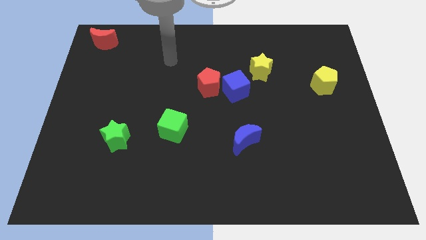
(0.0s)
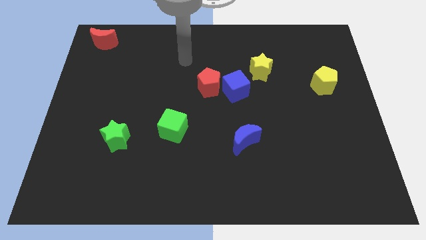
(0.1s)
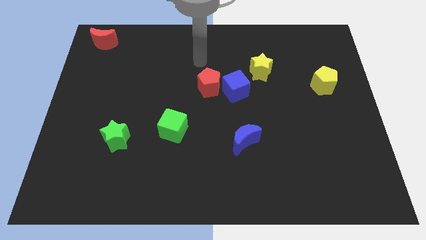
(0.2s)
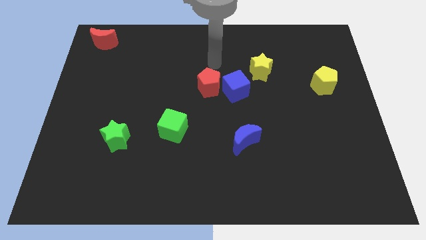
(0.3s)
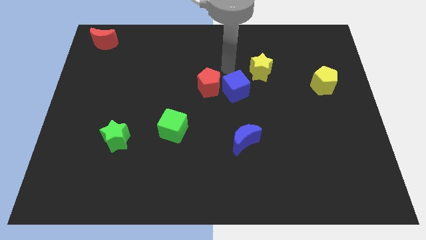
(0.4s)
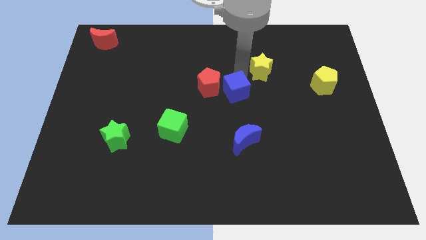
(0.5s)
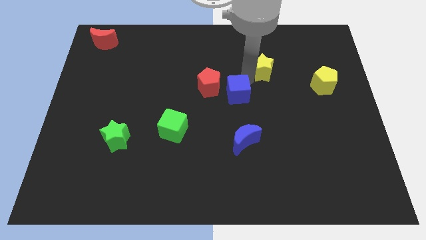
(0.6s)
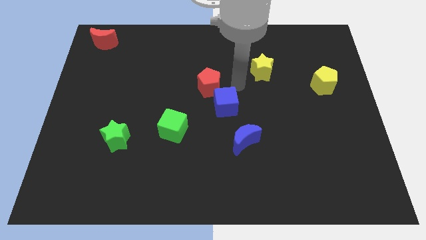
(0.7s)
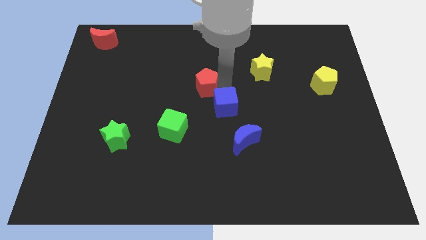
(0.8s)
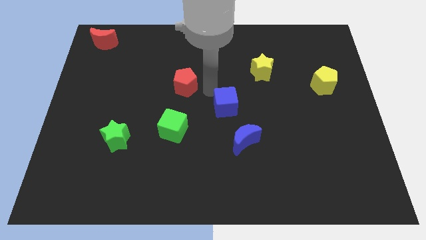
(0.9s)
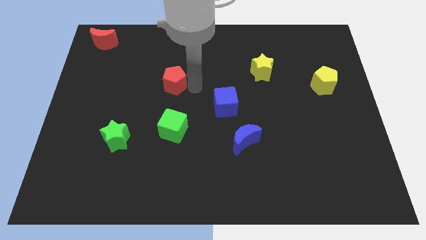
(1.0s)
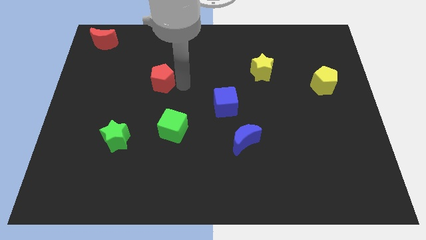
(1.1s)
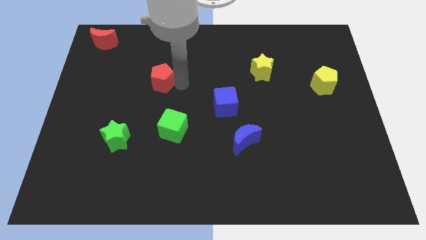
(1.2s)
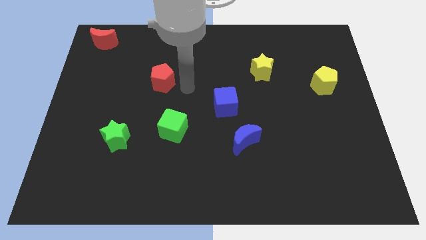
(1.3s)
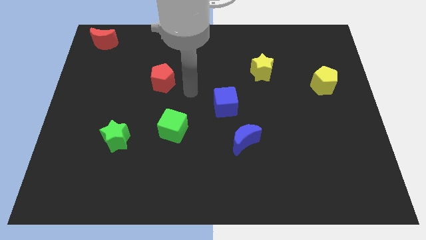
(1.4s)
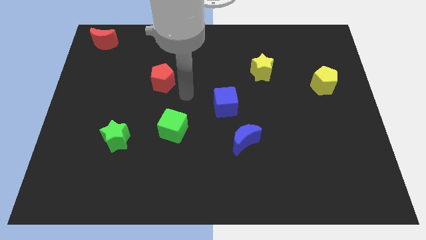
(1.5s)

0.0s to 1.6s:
separate the red pentagon and blue moon

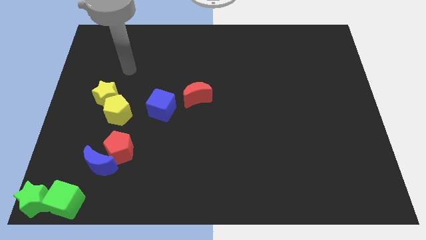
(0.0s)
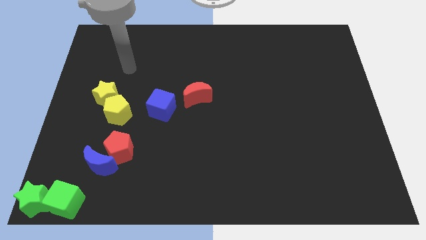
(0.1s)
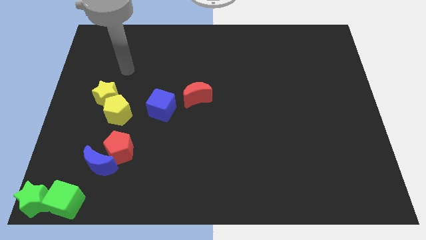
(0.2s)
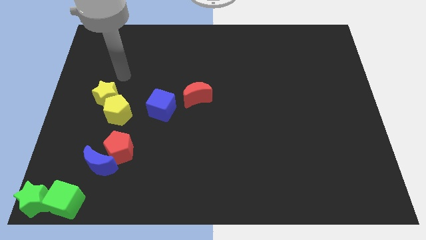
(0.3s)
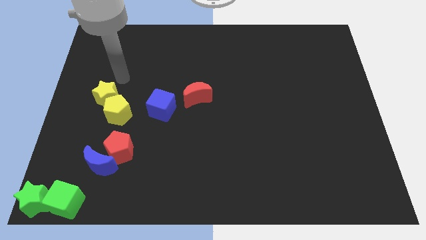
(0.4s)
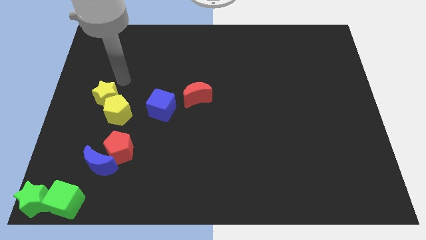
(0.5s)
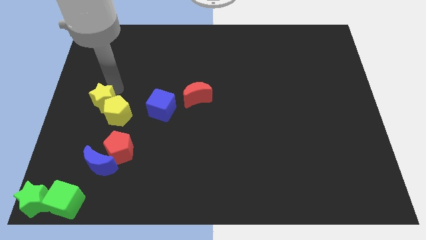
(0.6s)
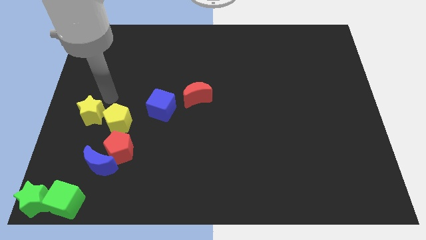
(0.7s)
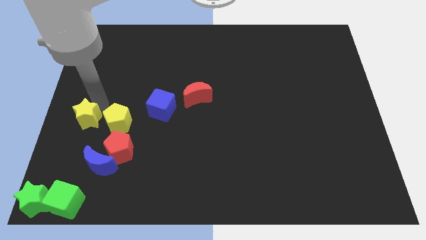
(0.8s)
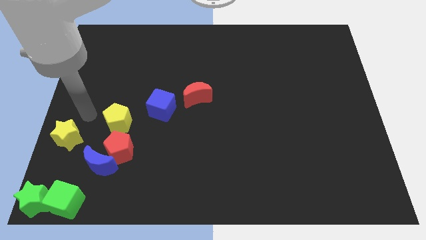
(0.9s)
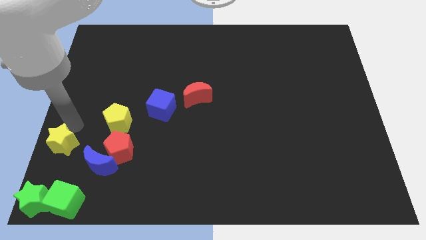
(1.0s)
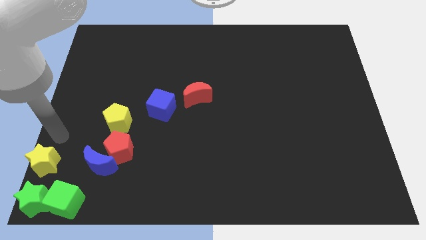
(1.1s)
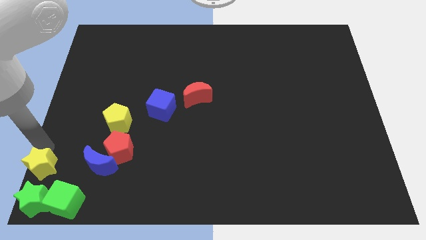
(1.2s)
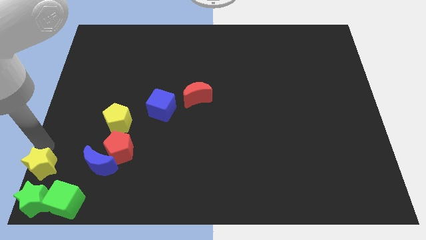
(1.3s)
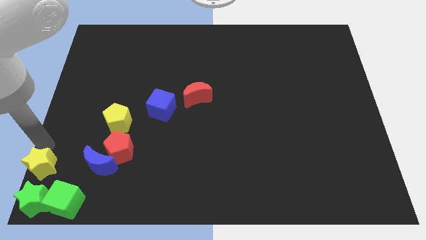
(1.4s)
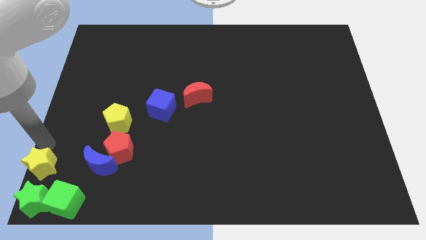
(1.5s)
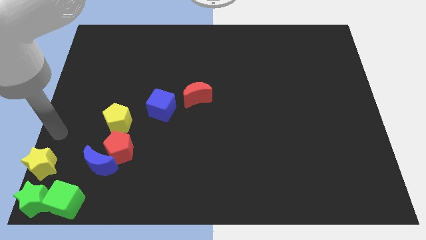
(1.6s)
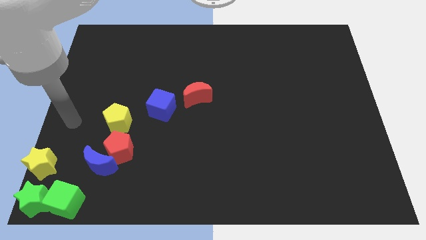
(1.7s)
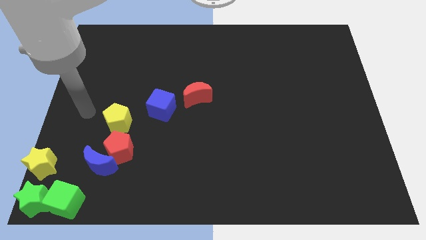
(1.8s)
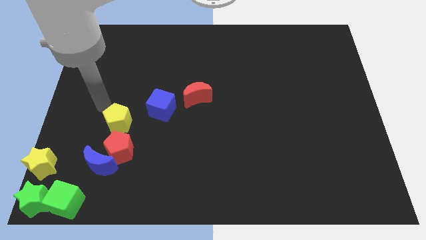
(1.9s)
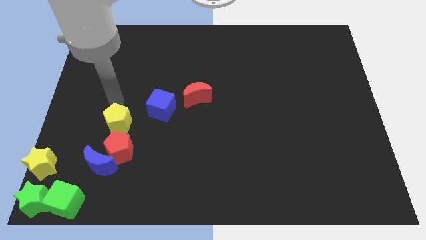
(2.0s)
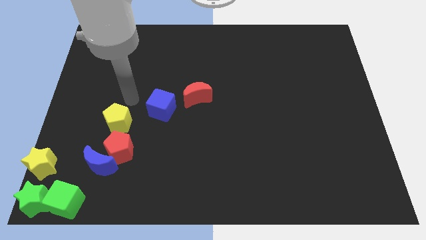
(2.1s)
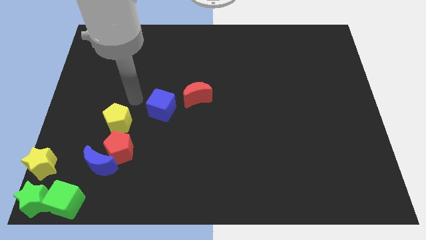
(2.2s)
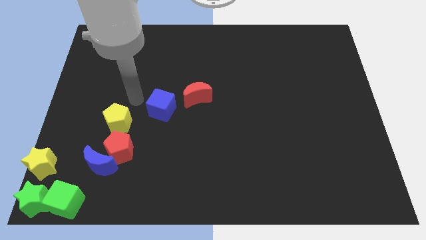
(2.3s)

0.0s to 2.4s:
move the yellow star to the bottom left side of the board

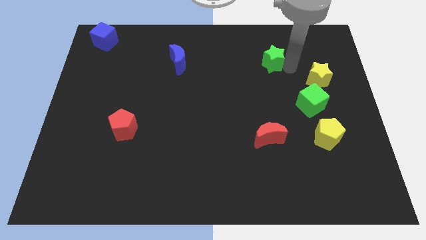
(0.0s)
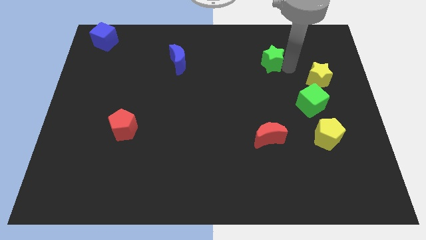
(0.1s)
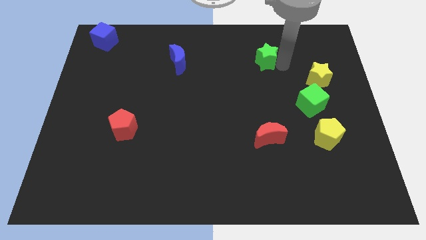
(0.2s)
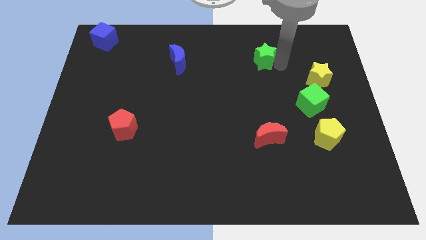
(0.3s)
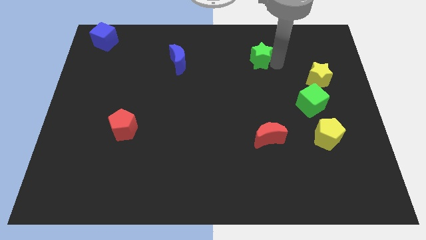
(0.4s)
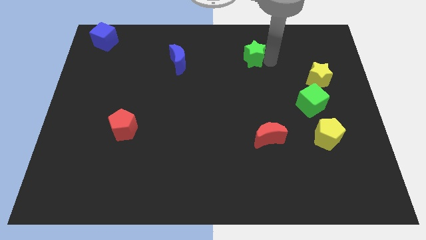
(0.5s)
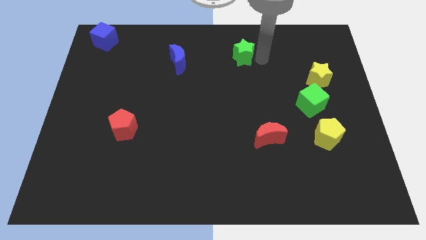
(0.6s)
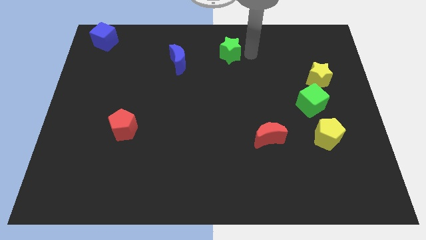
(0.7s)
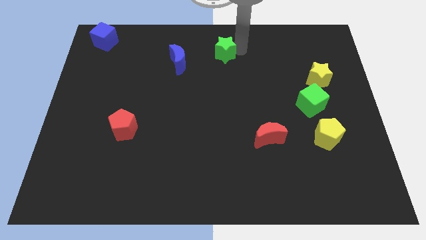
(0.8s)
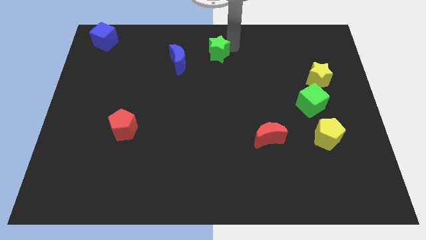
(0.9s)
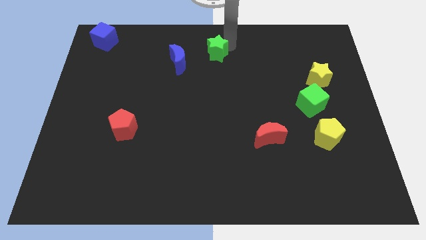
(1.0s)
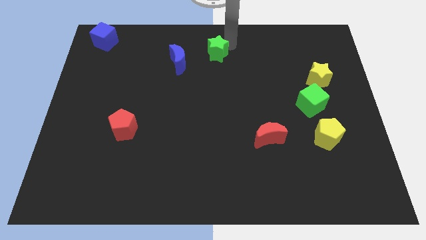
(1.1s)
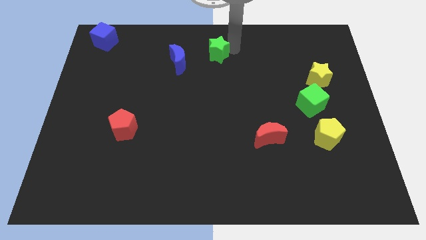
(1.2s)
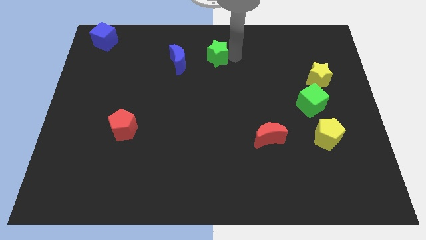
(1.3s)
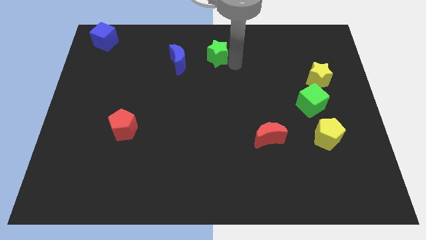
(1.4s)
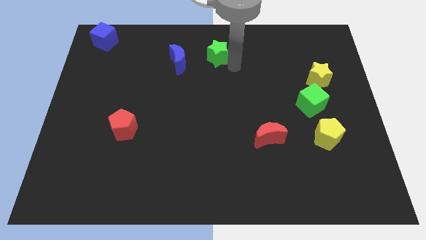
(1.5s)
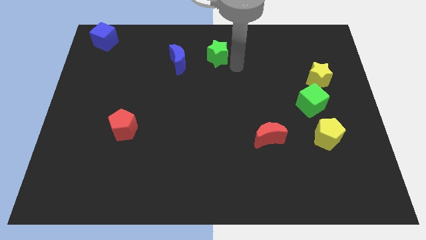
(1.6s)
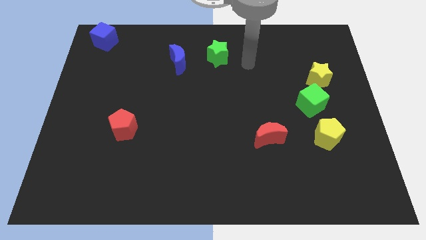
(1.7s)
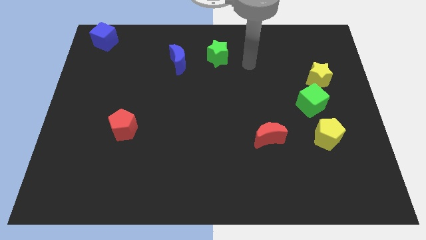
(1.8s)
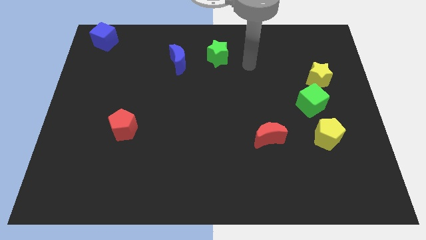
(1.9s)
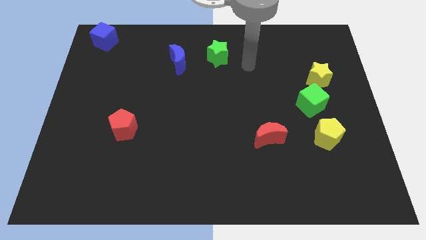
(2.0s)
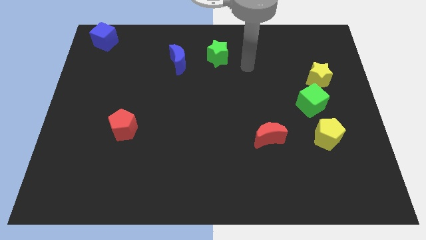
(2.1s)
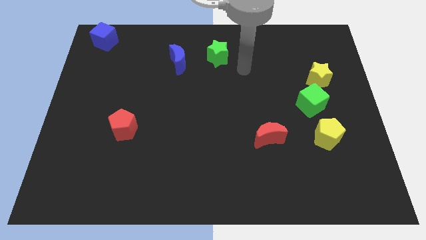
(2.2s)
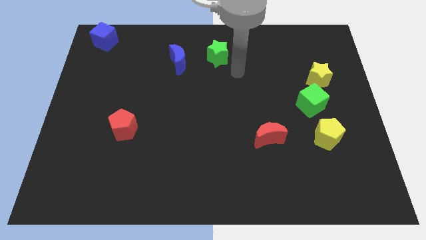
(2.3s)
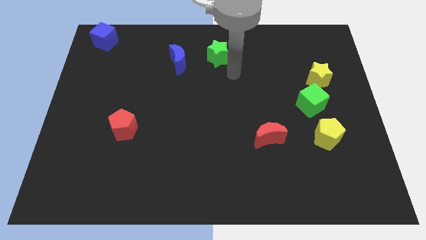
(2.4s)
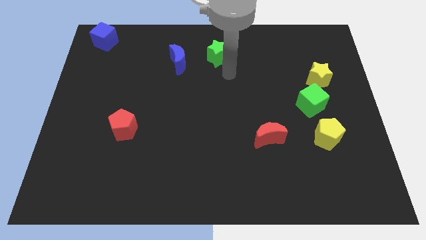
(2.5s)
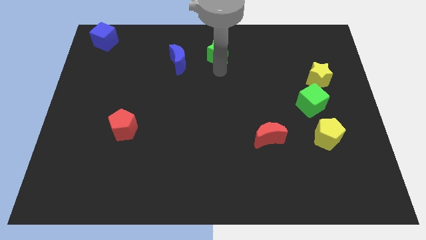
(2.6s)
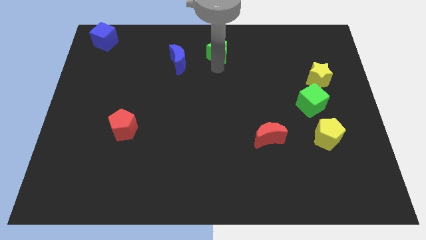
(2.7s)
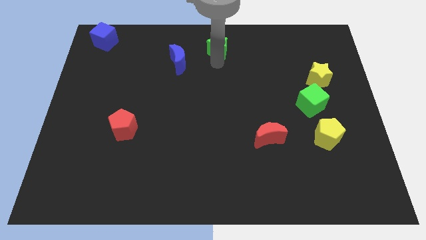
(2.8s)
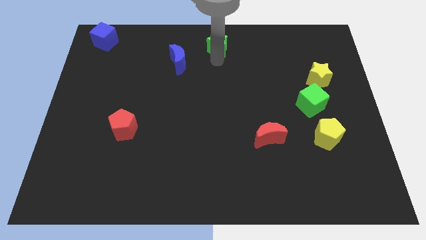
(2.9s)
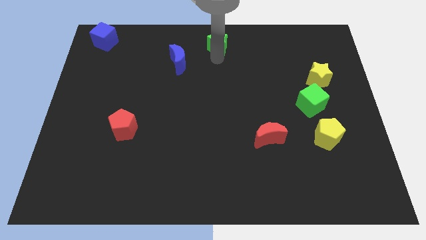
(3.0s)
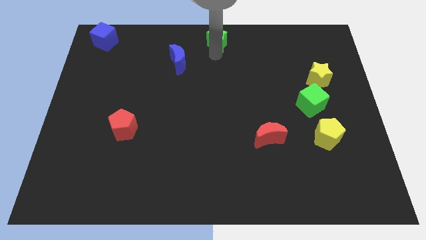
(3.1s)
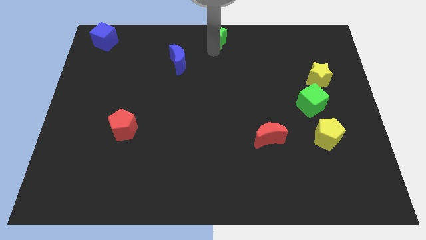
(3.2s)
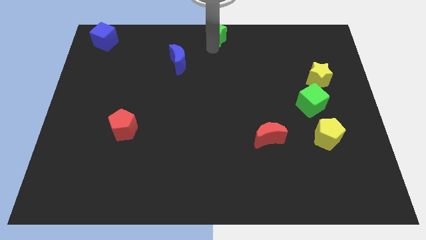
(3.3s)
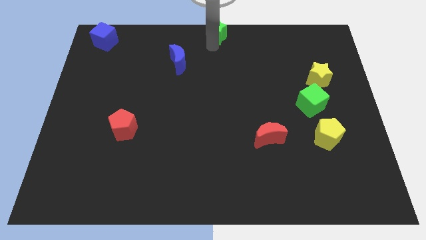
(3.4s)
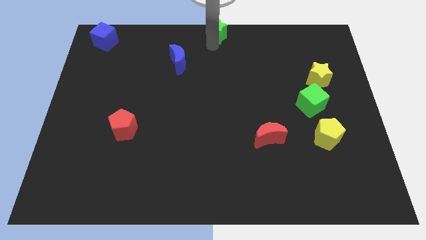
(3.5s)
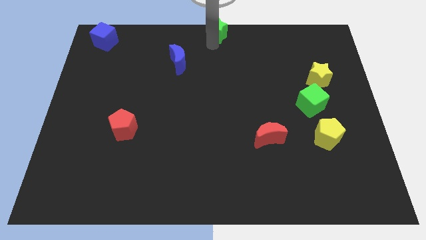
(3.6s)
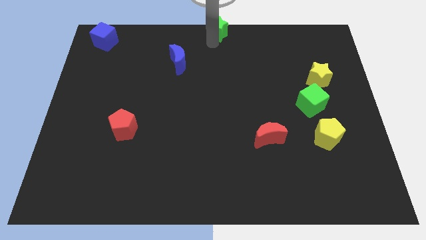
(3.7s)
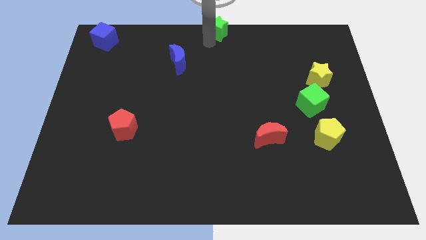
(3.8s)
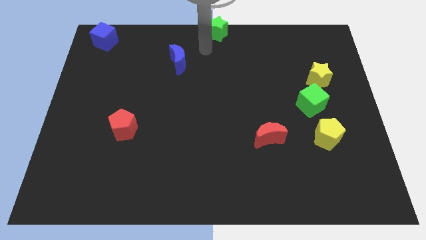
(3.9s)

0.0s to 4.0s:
place green star to the top left

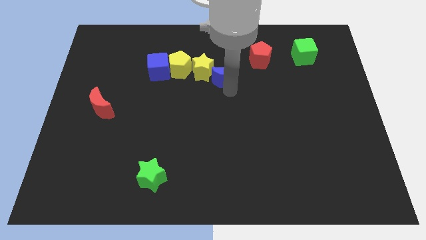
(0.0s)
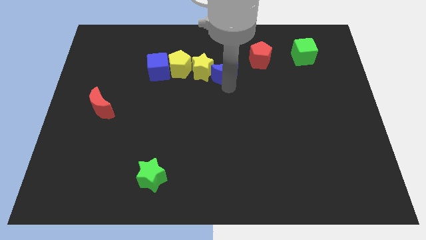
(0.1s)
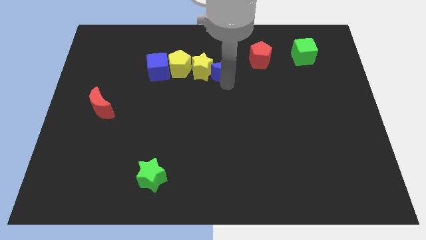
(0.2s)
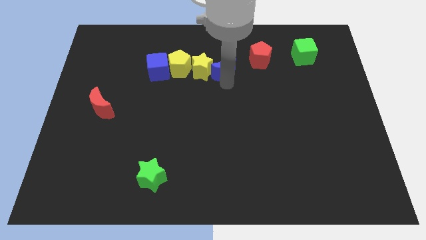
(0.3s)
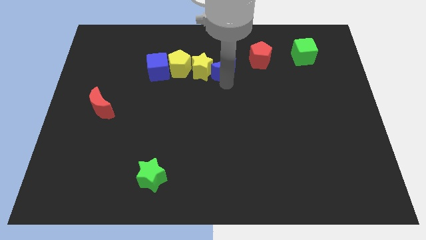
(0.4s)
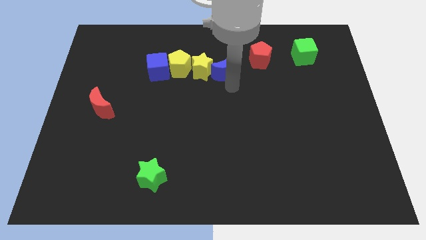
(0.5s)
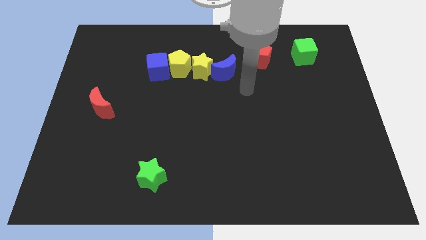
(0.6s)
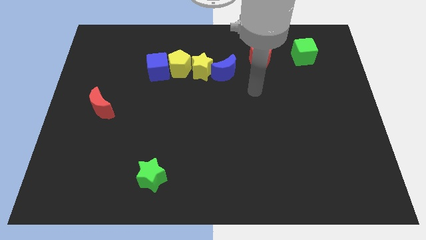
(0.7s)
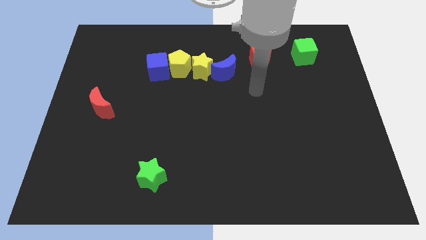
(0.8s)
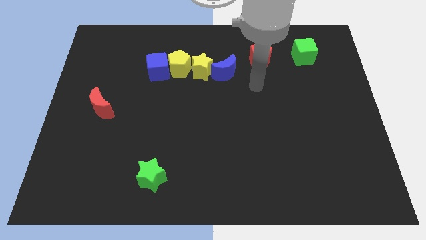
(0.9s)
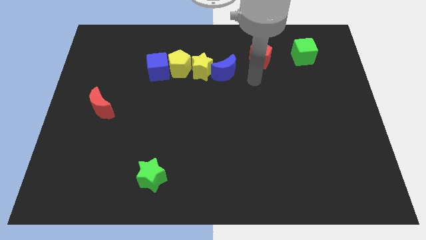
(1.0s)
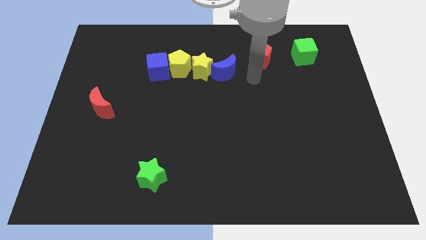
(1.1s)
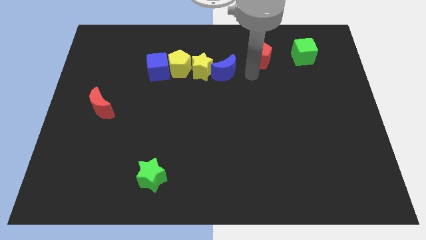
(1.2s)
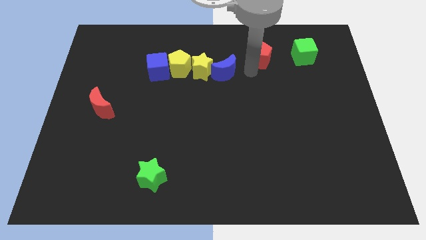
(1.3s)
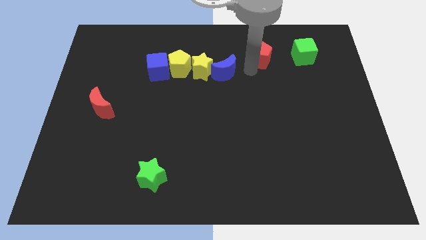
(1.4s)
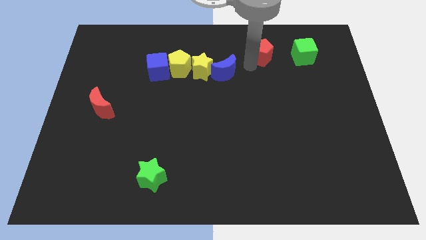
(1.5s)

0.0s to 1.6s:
move your arm towards the red pentagon
